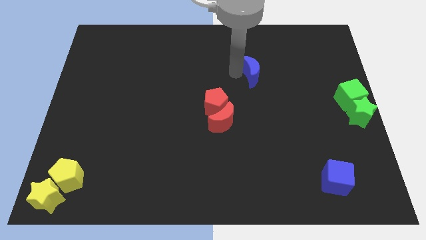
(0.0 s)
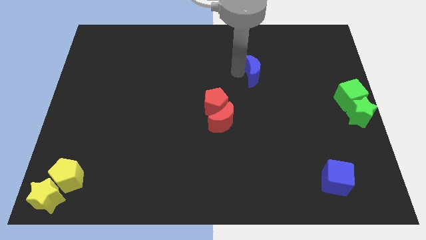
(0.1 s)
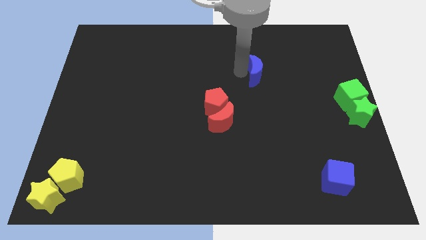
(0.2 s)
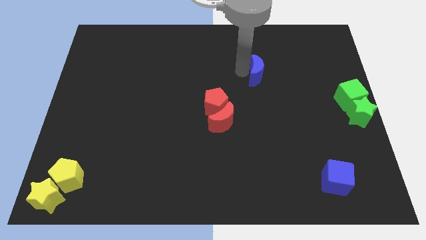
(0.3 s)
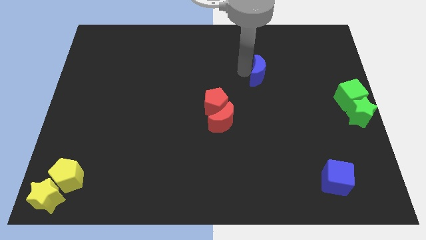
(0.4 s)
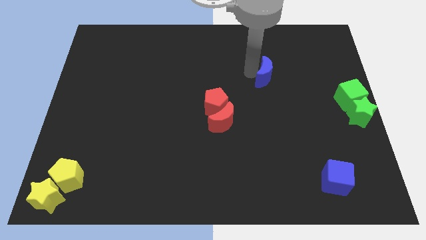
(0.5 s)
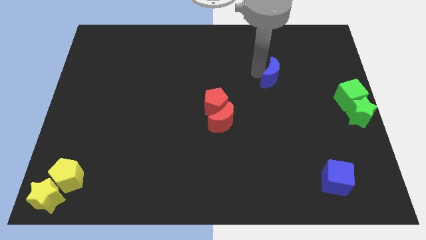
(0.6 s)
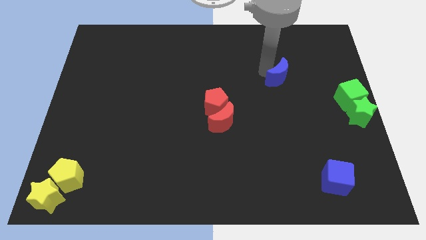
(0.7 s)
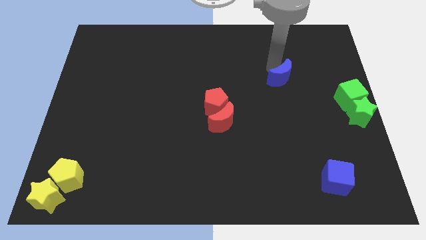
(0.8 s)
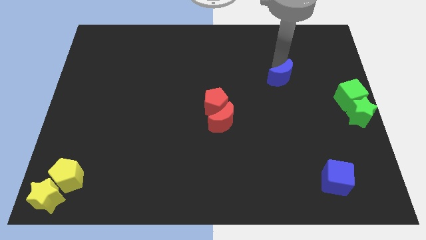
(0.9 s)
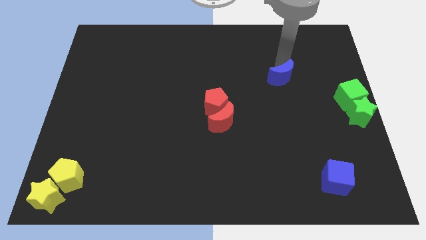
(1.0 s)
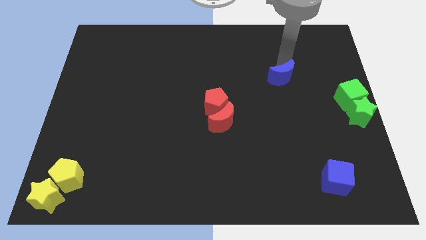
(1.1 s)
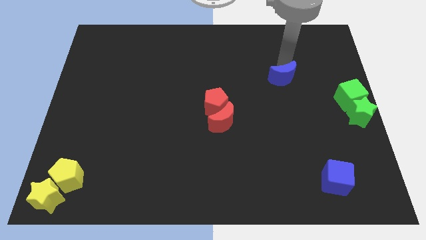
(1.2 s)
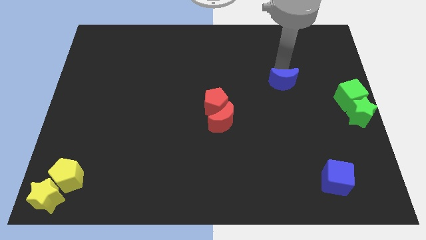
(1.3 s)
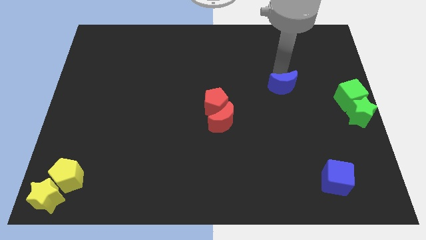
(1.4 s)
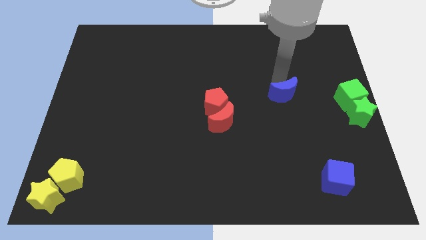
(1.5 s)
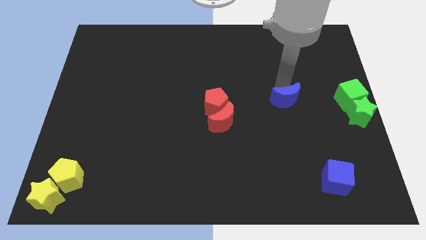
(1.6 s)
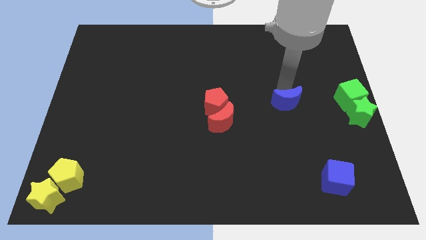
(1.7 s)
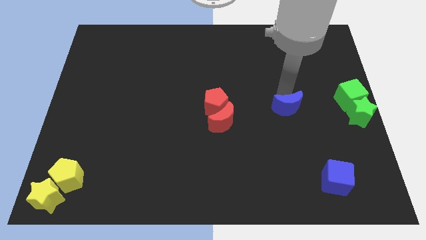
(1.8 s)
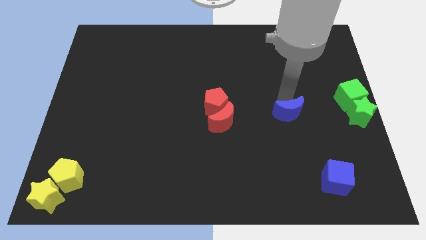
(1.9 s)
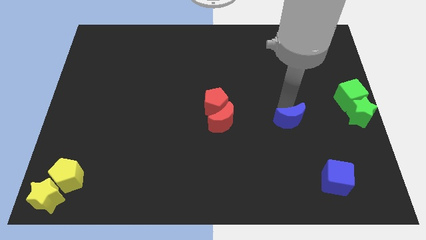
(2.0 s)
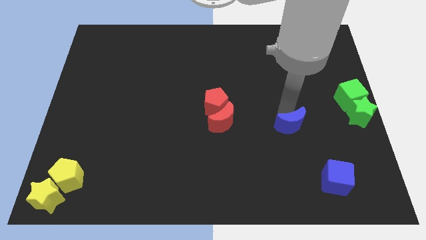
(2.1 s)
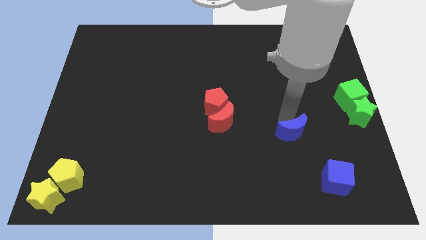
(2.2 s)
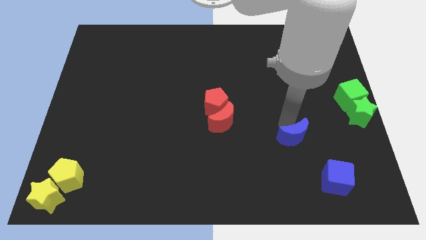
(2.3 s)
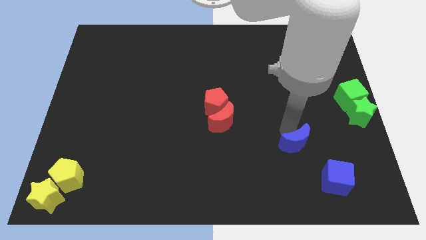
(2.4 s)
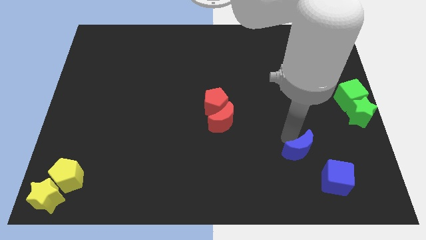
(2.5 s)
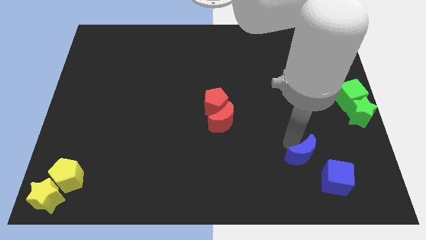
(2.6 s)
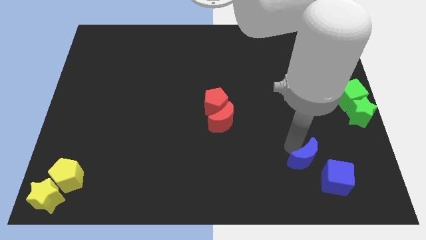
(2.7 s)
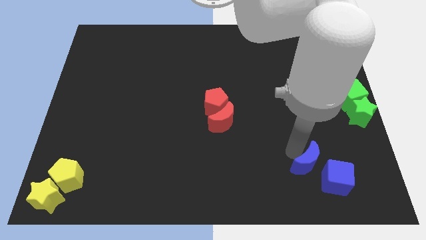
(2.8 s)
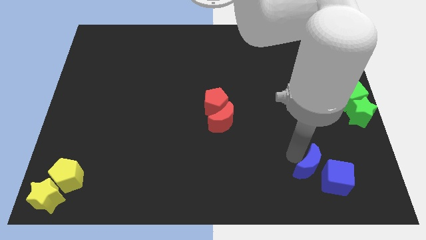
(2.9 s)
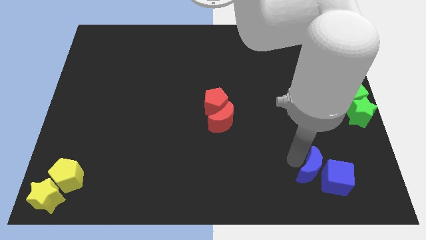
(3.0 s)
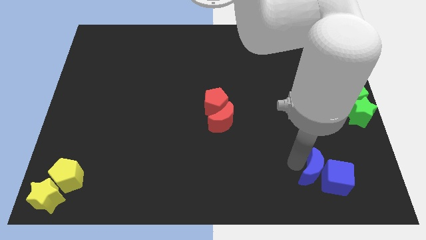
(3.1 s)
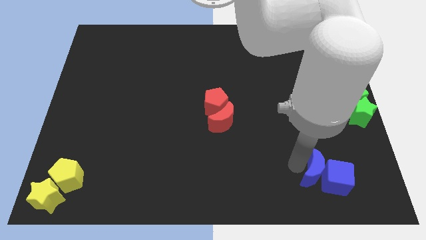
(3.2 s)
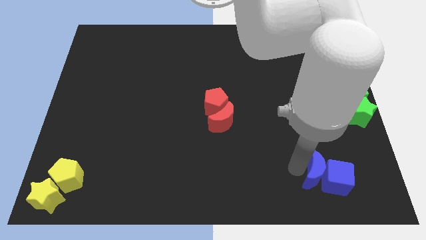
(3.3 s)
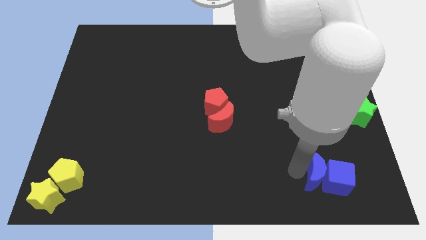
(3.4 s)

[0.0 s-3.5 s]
push the blue crescent left to the blue cube

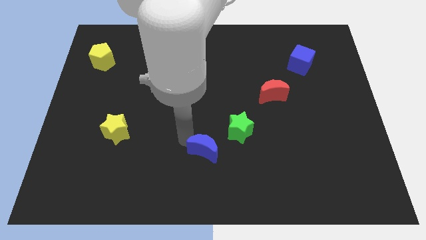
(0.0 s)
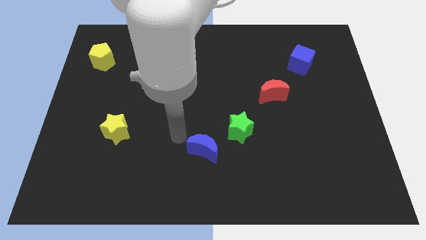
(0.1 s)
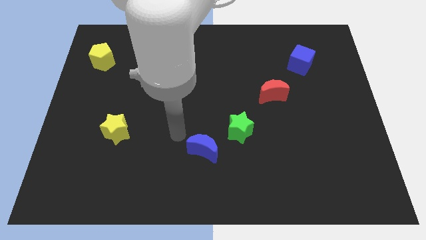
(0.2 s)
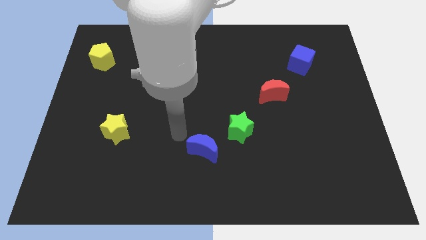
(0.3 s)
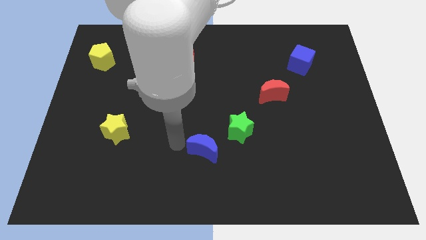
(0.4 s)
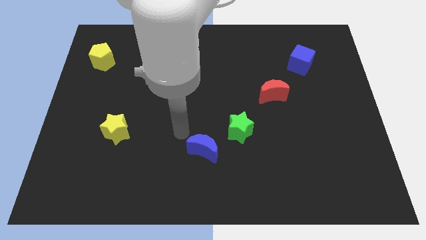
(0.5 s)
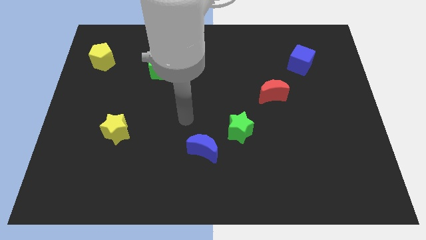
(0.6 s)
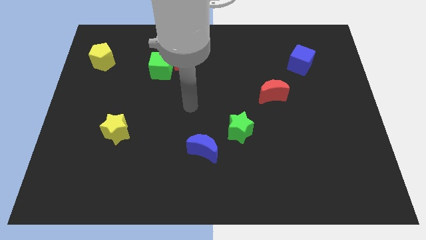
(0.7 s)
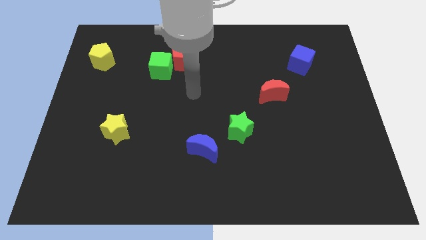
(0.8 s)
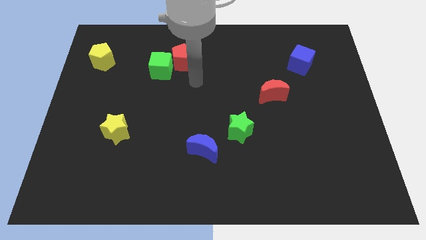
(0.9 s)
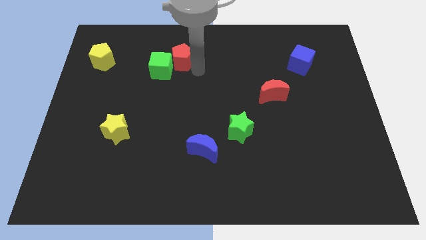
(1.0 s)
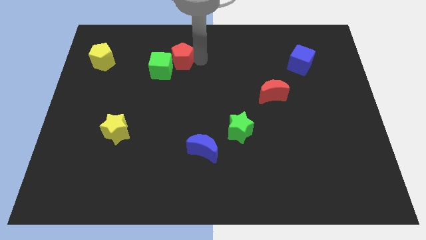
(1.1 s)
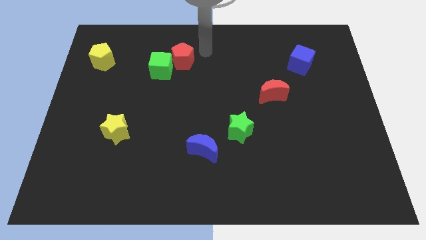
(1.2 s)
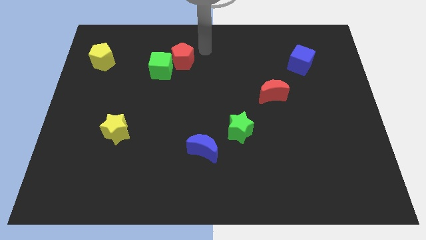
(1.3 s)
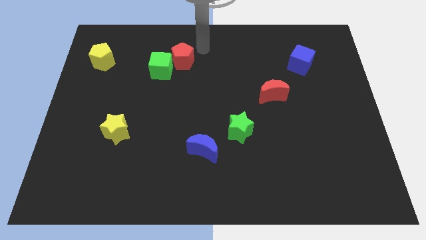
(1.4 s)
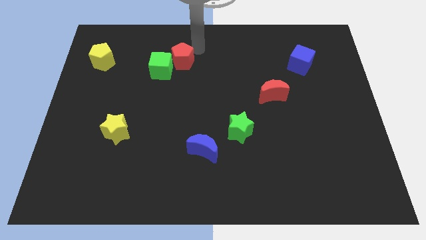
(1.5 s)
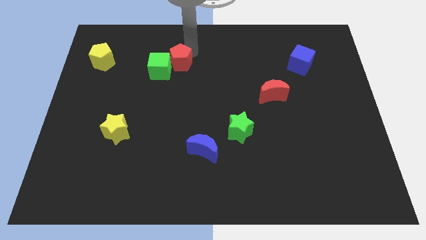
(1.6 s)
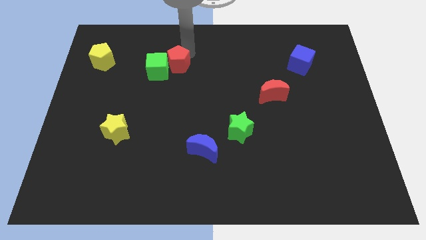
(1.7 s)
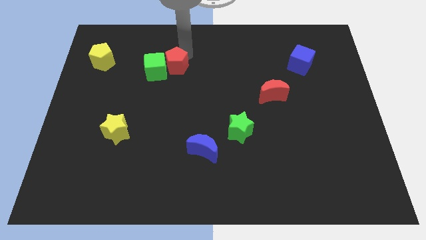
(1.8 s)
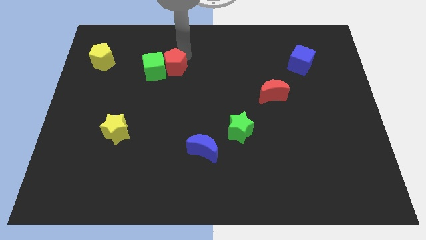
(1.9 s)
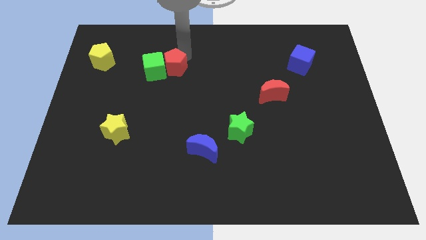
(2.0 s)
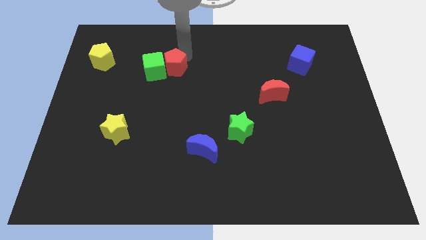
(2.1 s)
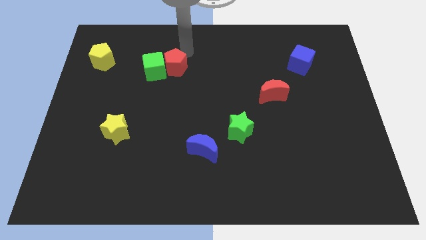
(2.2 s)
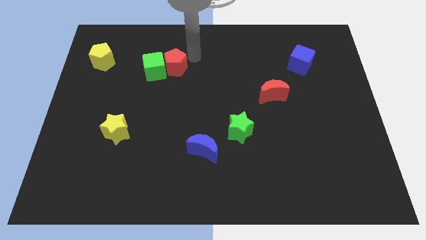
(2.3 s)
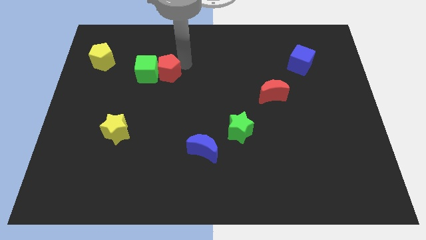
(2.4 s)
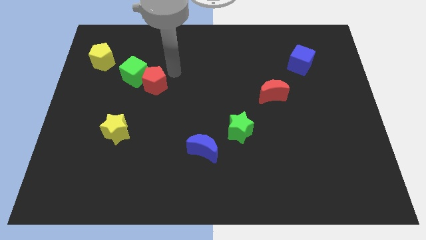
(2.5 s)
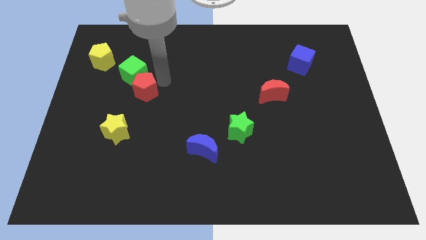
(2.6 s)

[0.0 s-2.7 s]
push red crescent below the green cube

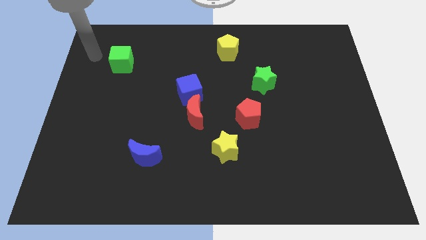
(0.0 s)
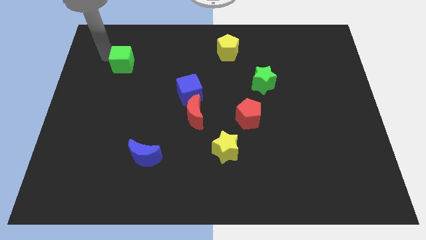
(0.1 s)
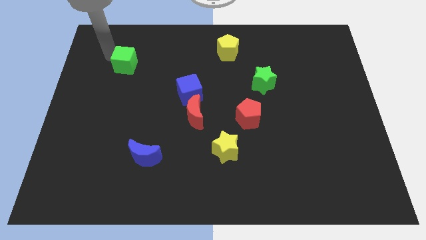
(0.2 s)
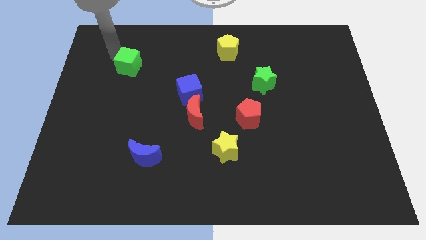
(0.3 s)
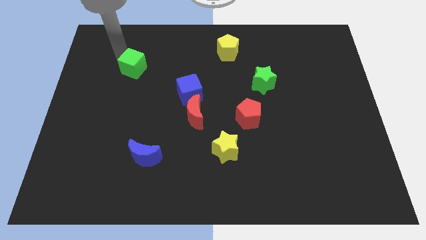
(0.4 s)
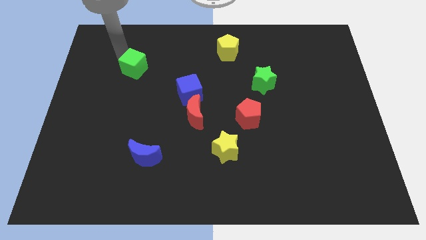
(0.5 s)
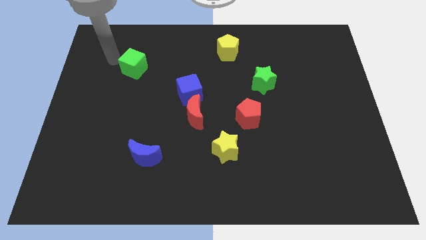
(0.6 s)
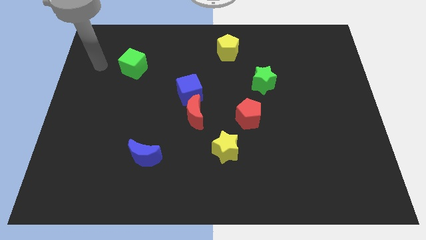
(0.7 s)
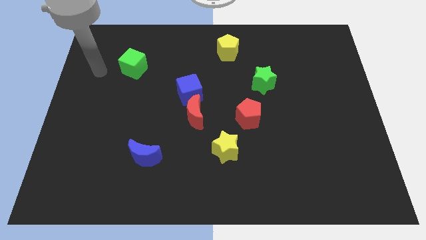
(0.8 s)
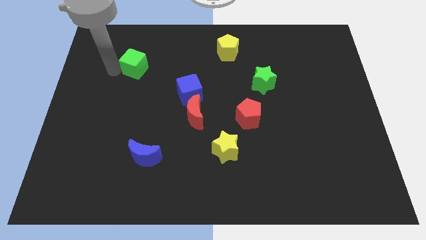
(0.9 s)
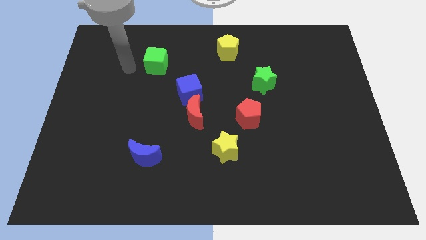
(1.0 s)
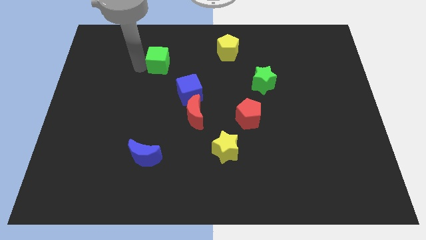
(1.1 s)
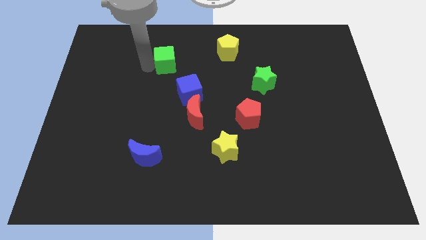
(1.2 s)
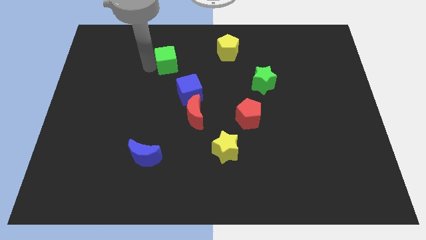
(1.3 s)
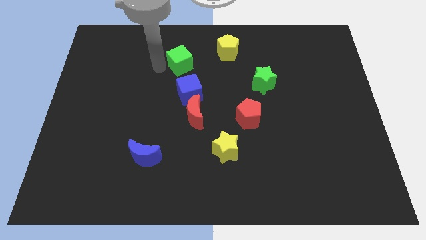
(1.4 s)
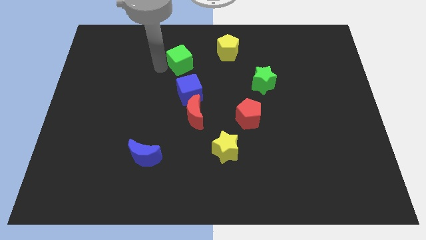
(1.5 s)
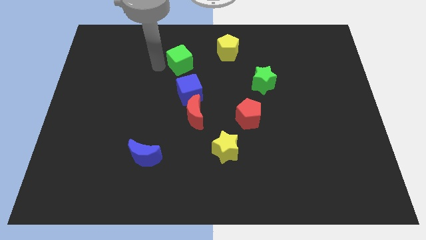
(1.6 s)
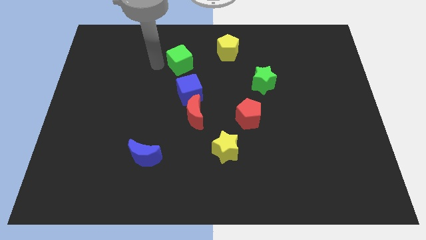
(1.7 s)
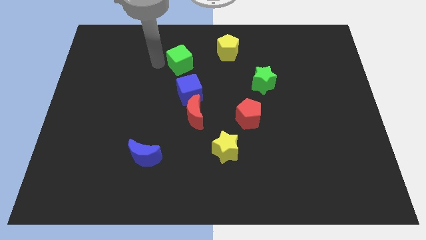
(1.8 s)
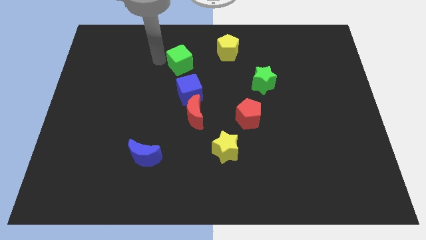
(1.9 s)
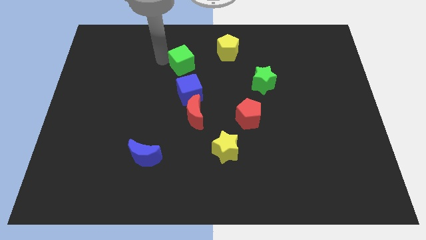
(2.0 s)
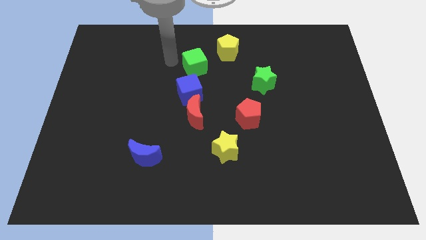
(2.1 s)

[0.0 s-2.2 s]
place green cube on top of the blue cube

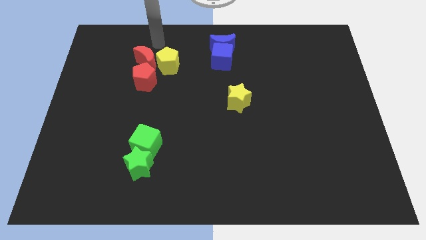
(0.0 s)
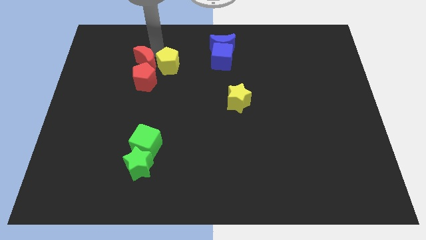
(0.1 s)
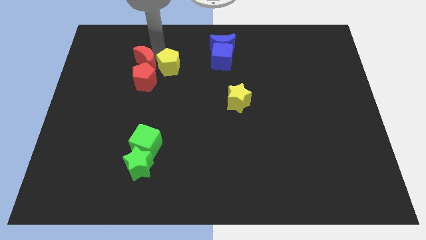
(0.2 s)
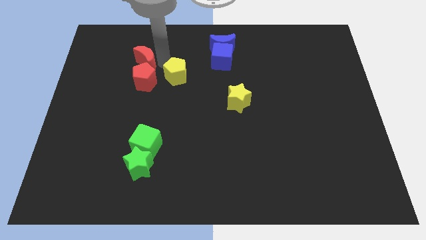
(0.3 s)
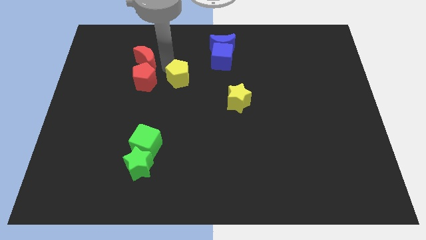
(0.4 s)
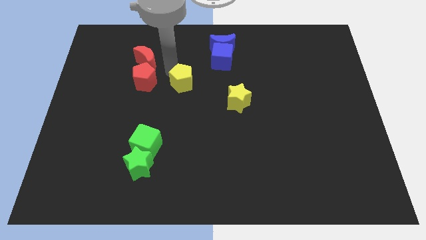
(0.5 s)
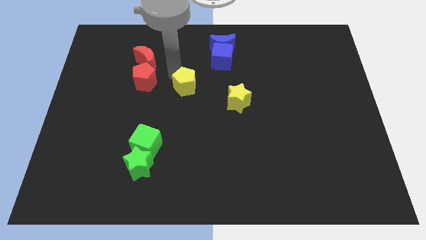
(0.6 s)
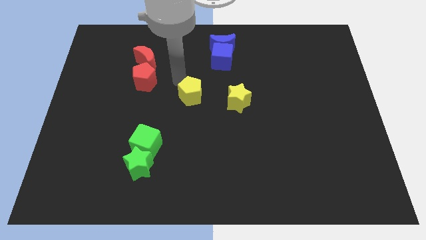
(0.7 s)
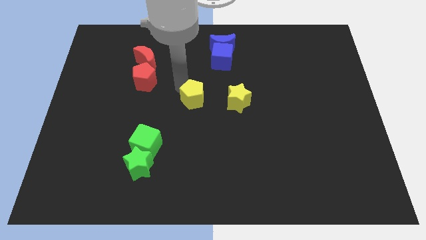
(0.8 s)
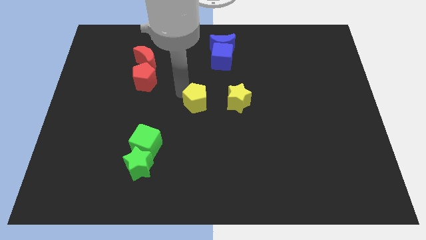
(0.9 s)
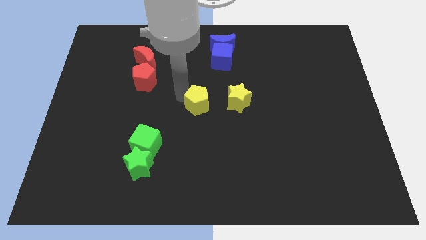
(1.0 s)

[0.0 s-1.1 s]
separate yellow pentagon from red moon
